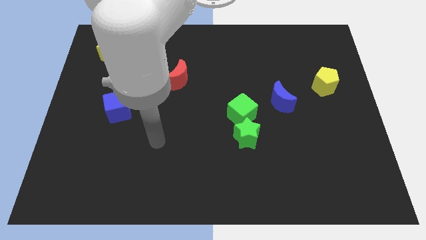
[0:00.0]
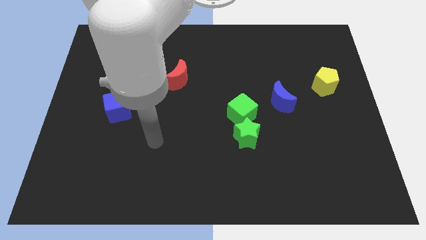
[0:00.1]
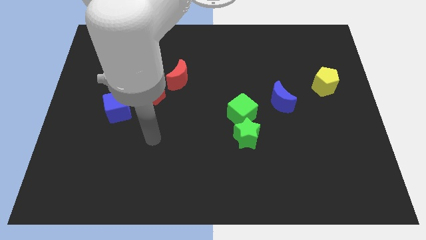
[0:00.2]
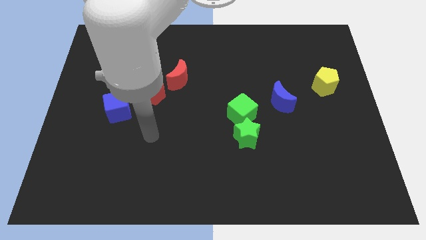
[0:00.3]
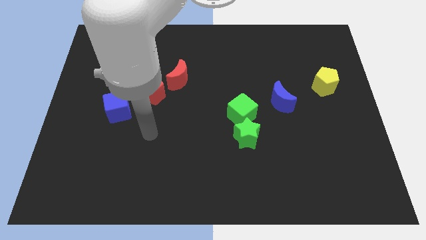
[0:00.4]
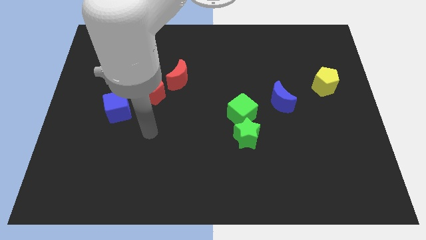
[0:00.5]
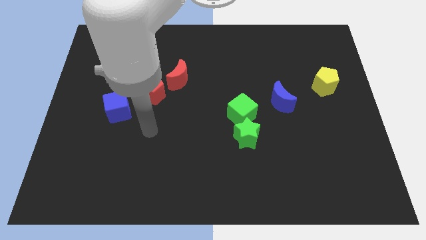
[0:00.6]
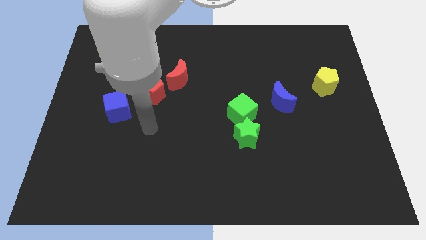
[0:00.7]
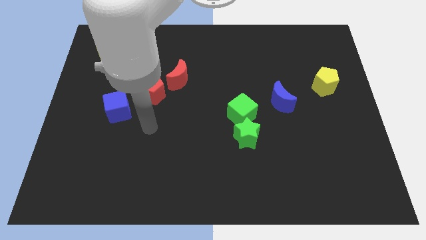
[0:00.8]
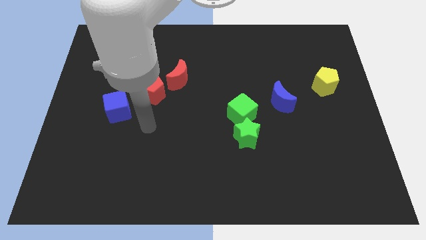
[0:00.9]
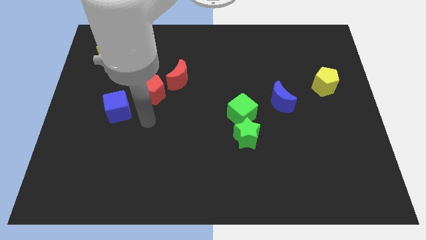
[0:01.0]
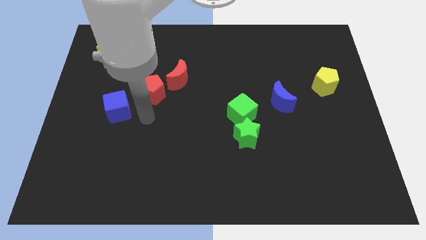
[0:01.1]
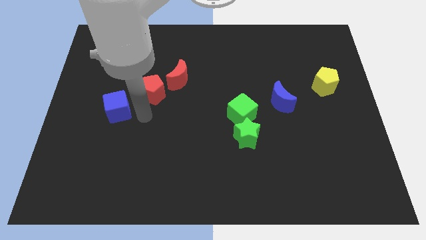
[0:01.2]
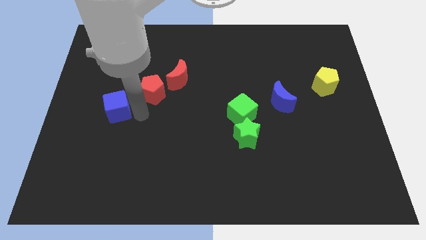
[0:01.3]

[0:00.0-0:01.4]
move your arm to the right of blue cube

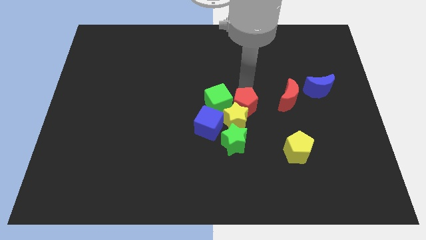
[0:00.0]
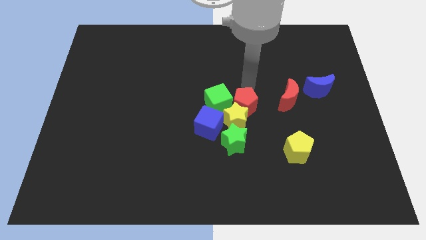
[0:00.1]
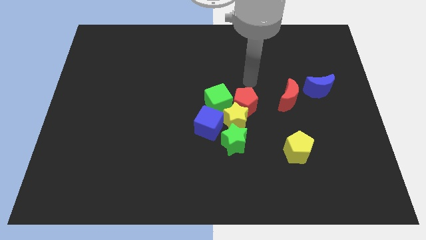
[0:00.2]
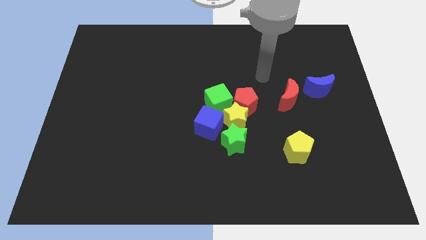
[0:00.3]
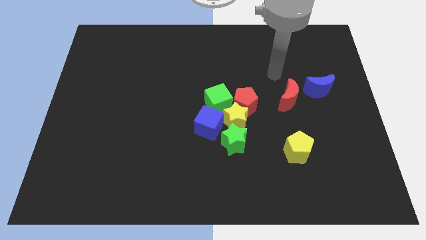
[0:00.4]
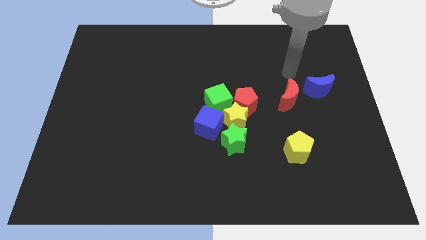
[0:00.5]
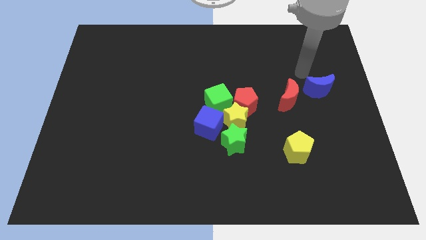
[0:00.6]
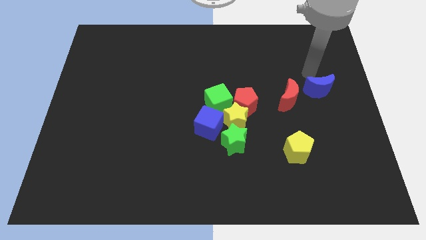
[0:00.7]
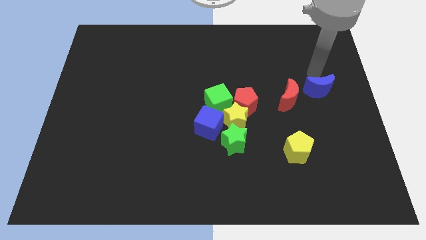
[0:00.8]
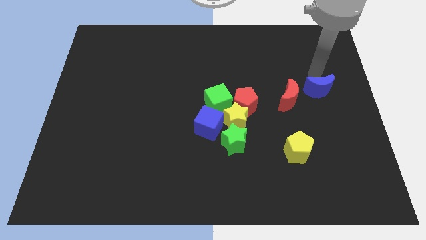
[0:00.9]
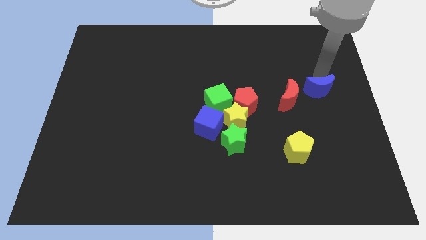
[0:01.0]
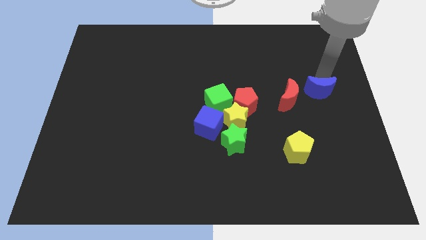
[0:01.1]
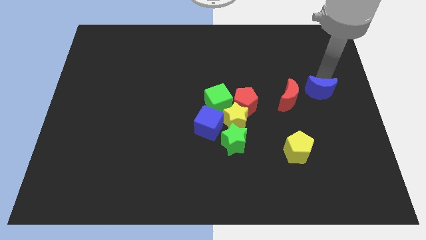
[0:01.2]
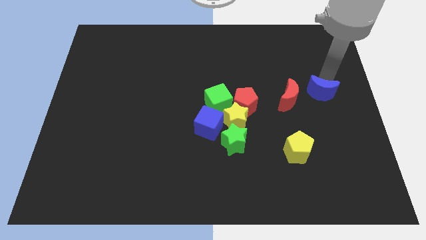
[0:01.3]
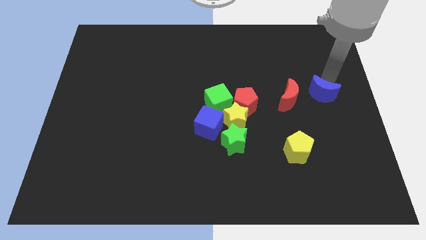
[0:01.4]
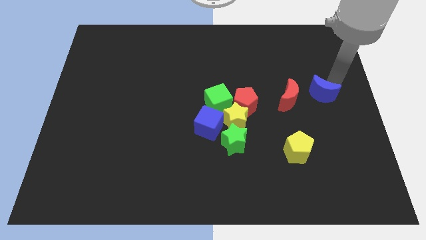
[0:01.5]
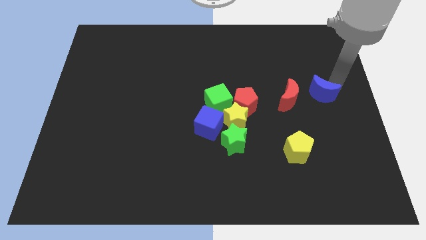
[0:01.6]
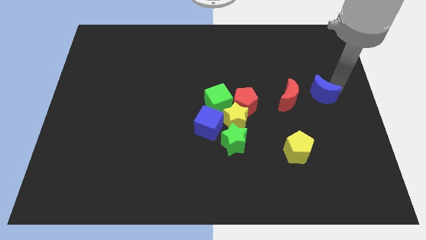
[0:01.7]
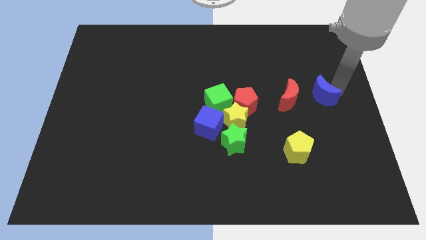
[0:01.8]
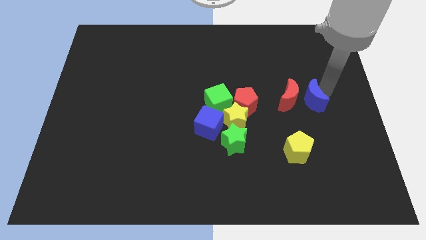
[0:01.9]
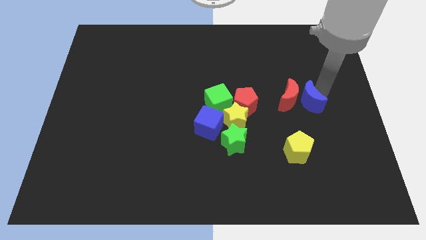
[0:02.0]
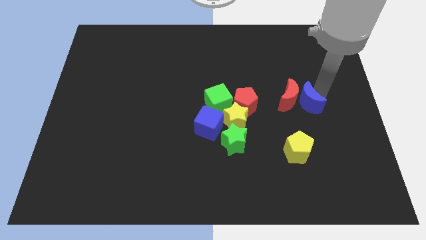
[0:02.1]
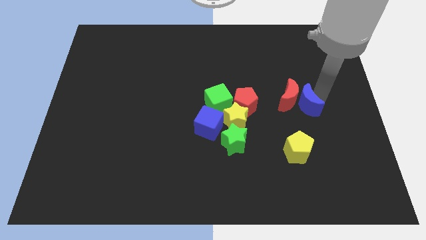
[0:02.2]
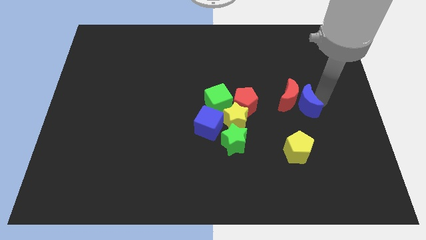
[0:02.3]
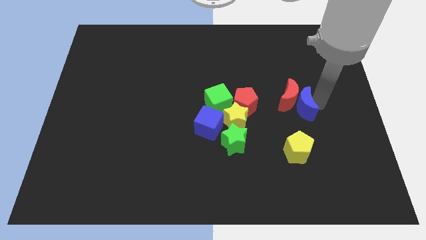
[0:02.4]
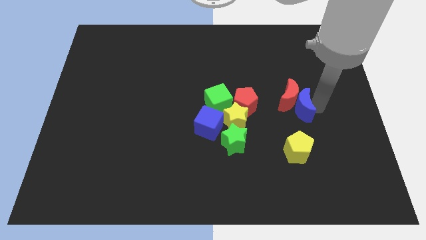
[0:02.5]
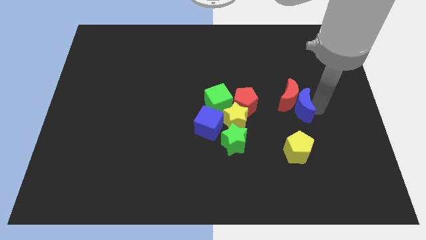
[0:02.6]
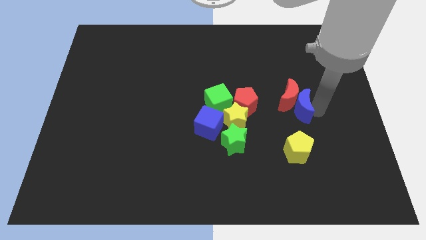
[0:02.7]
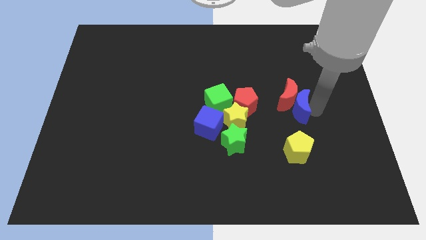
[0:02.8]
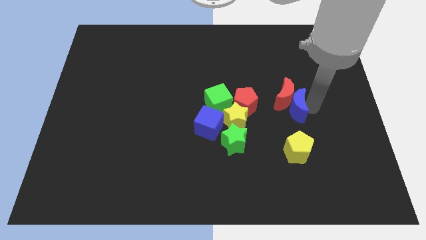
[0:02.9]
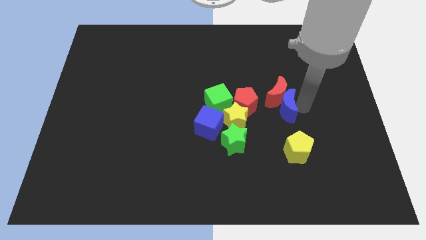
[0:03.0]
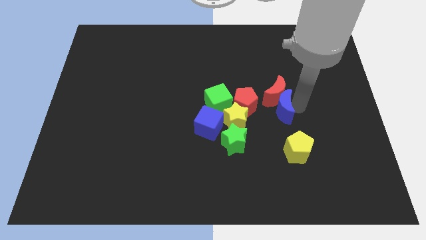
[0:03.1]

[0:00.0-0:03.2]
push blue moon into the red moon

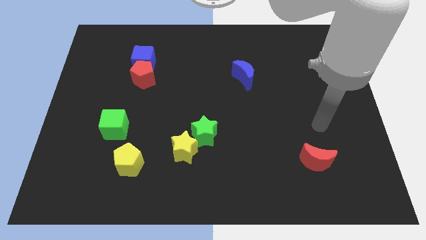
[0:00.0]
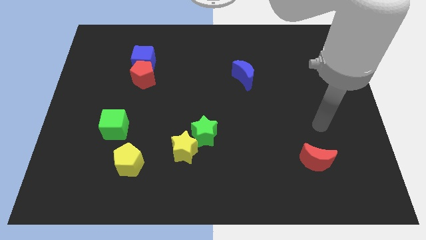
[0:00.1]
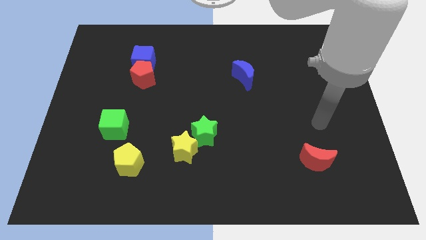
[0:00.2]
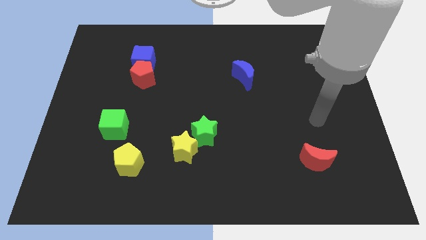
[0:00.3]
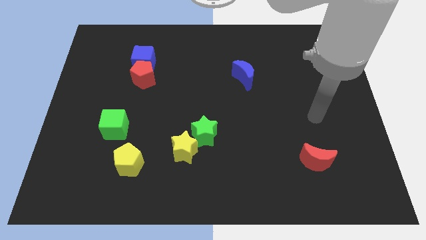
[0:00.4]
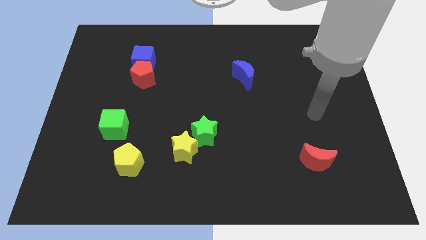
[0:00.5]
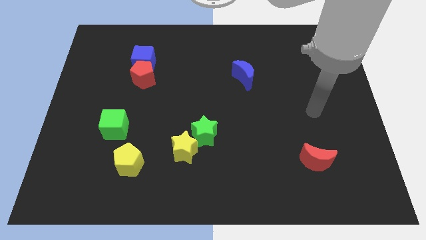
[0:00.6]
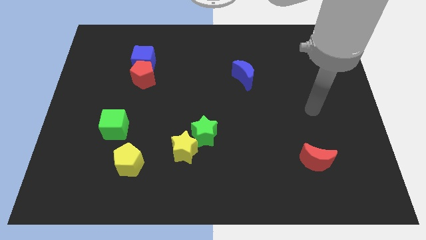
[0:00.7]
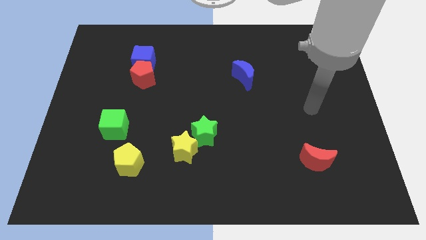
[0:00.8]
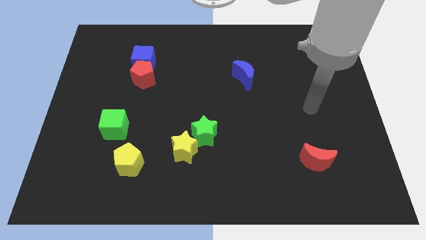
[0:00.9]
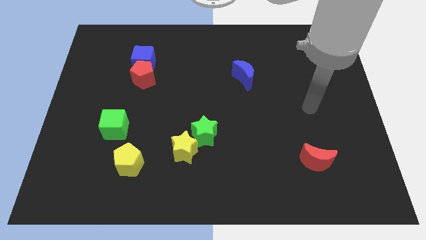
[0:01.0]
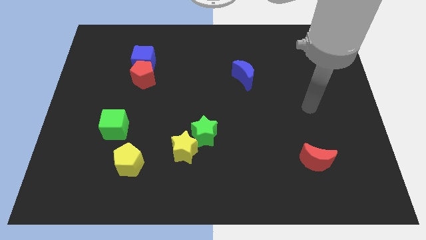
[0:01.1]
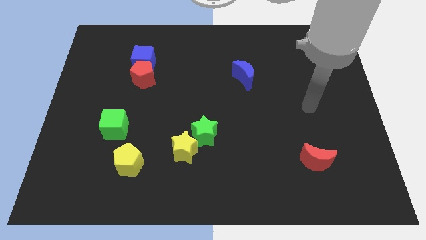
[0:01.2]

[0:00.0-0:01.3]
move arm vertically upwards

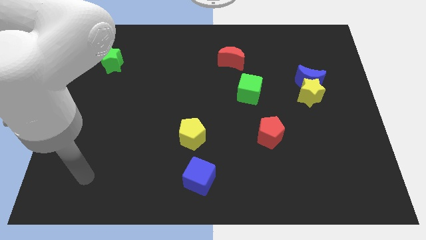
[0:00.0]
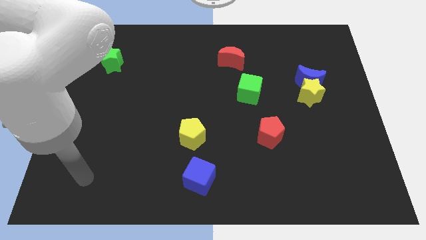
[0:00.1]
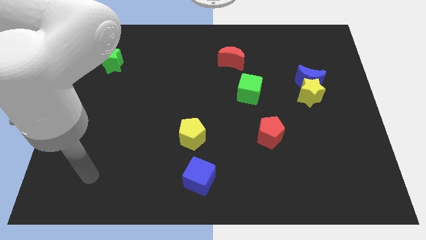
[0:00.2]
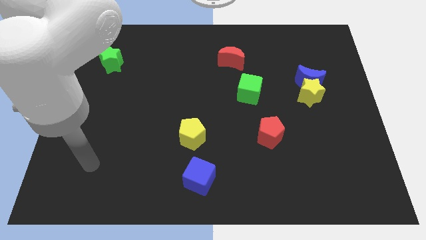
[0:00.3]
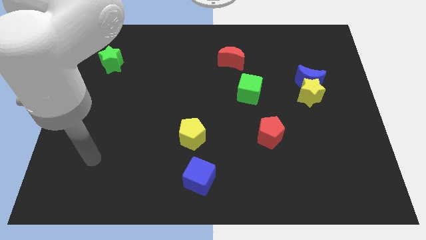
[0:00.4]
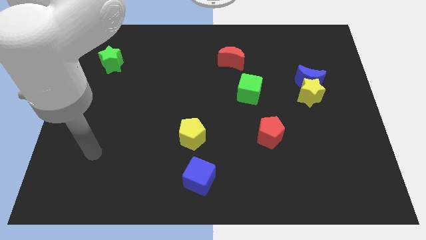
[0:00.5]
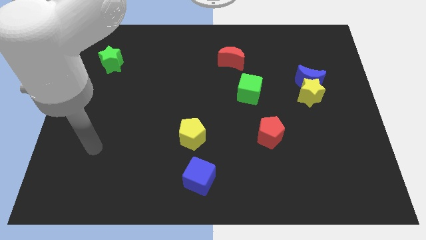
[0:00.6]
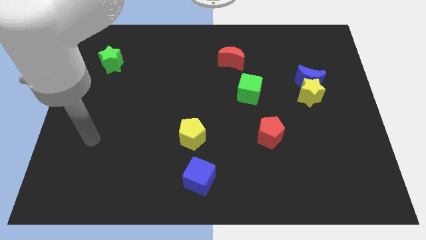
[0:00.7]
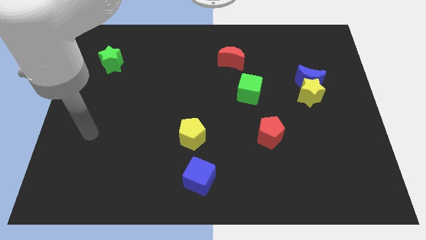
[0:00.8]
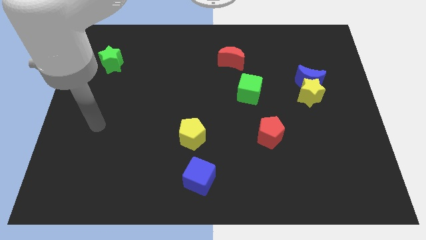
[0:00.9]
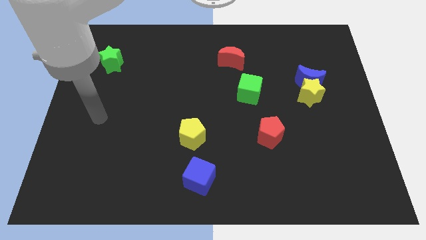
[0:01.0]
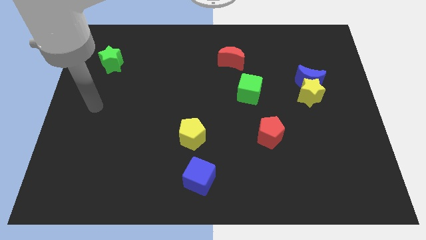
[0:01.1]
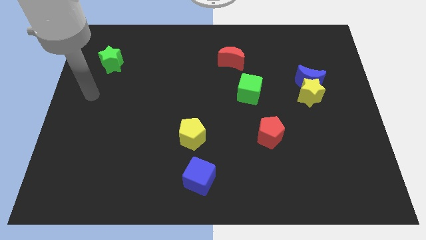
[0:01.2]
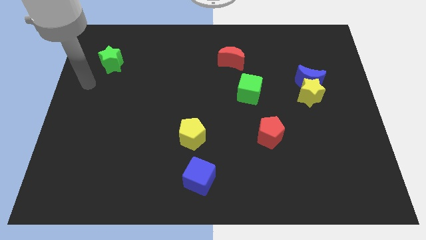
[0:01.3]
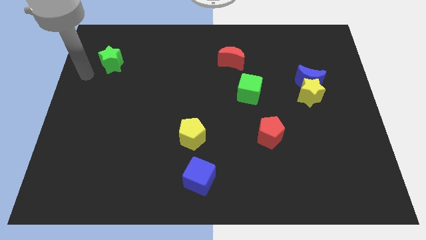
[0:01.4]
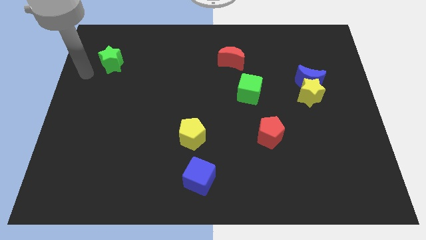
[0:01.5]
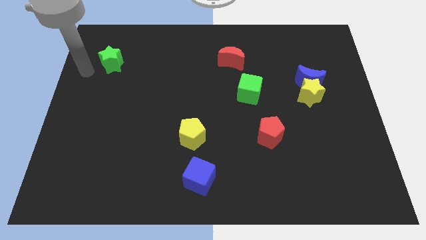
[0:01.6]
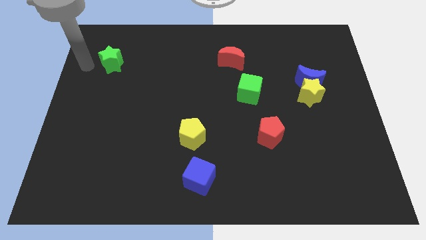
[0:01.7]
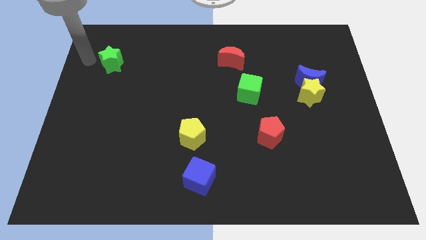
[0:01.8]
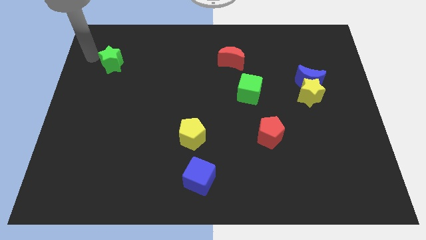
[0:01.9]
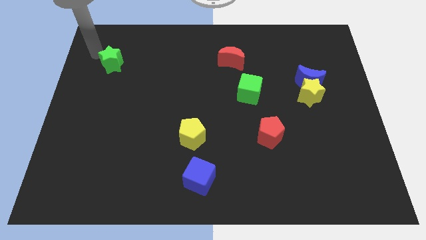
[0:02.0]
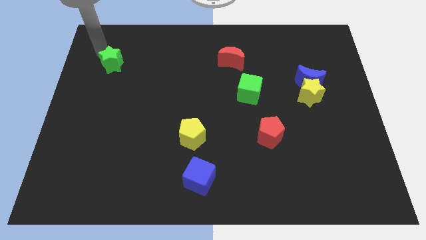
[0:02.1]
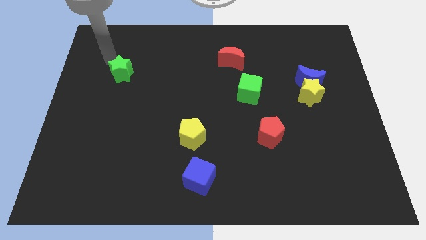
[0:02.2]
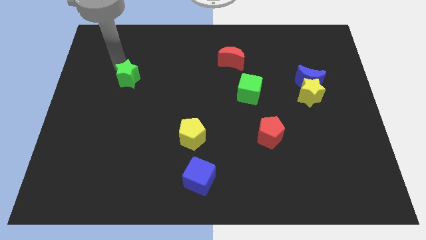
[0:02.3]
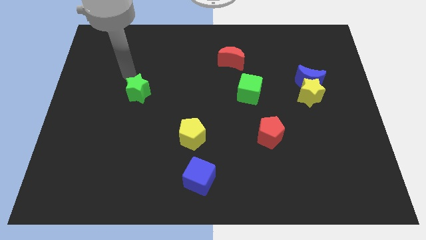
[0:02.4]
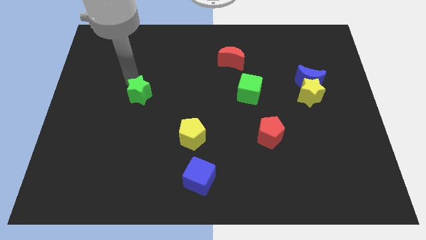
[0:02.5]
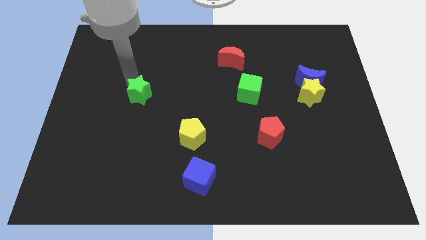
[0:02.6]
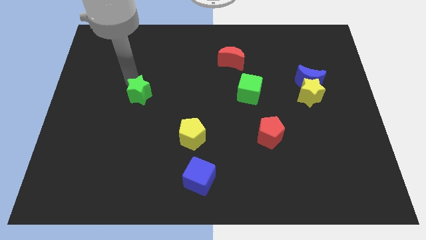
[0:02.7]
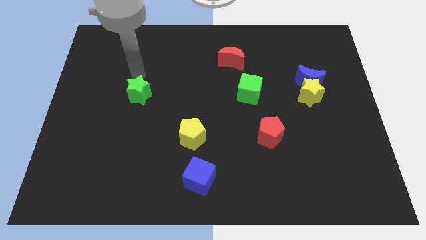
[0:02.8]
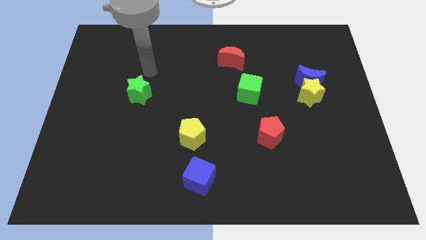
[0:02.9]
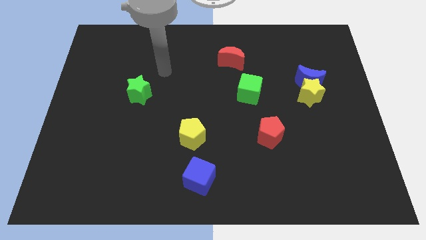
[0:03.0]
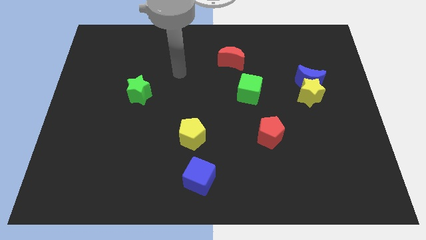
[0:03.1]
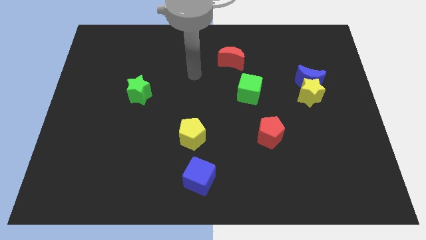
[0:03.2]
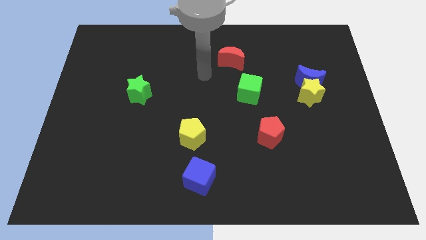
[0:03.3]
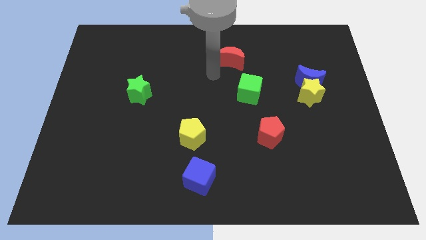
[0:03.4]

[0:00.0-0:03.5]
move the green star diagonally on the top left side of yellow pentagon
